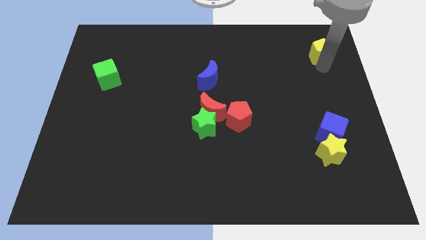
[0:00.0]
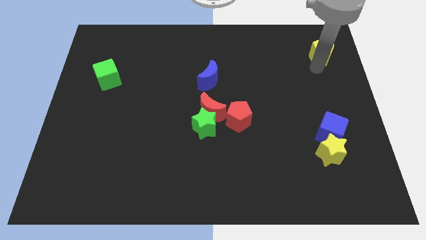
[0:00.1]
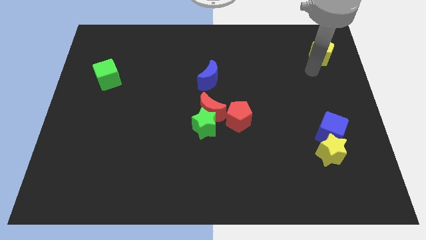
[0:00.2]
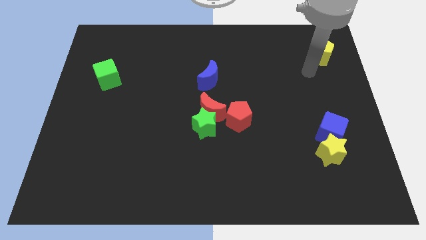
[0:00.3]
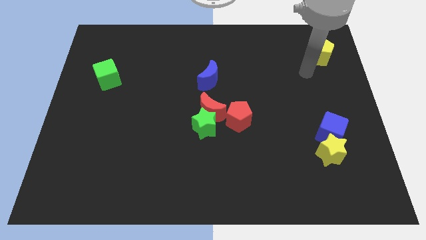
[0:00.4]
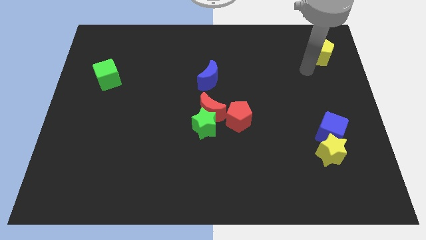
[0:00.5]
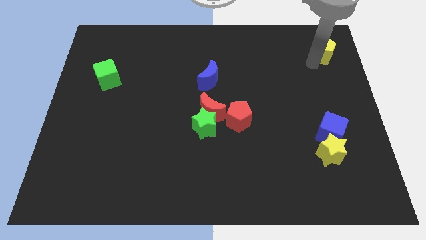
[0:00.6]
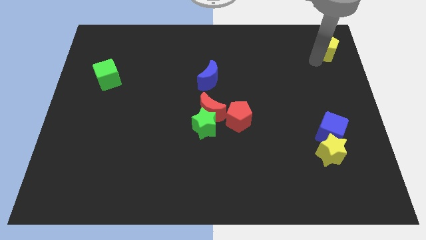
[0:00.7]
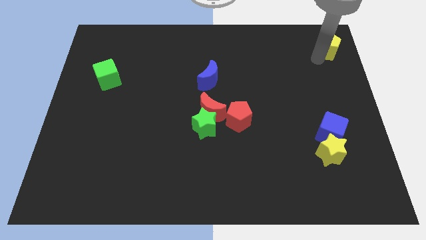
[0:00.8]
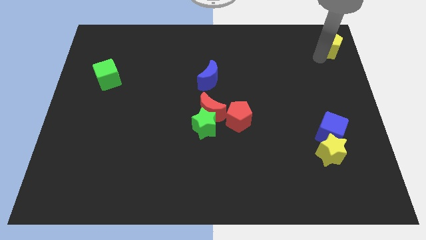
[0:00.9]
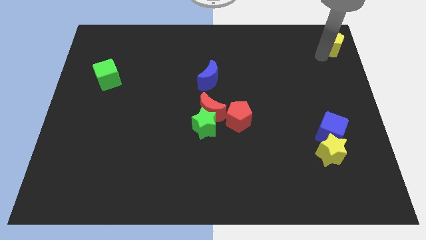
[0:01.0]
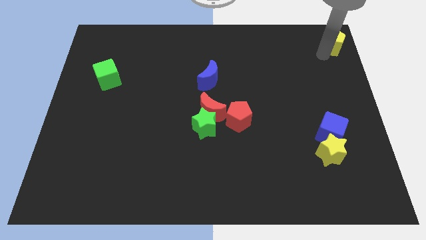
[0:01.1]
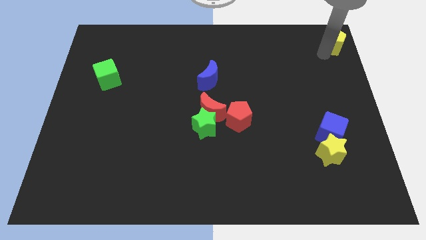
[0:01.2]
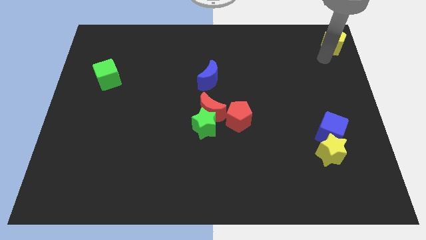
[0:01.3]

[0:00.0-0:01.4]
slide the yellow pentagon towards the top right of the board

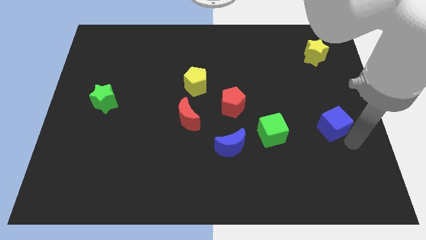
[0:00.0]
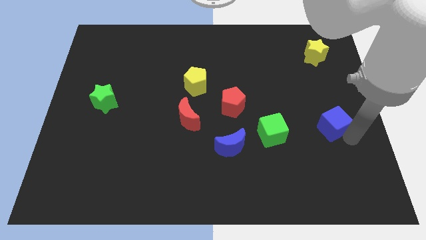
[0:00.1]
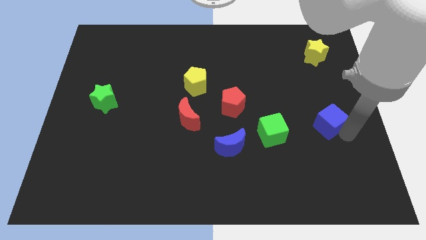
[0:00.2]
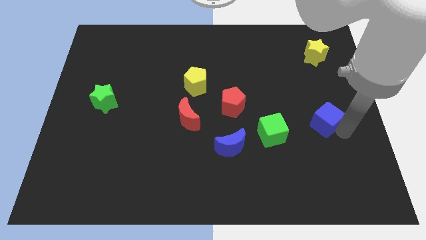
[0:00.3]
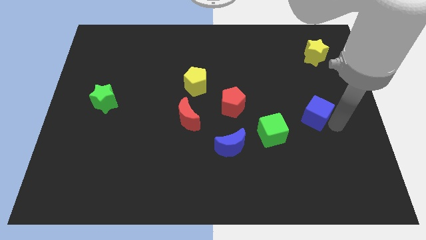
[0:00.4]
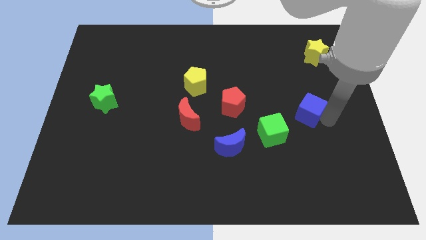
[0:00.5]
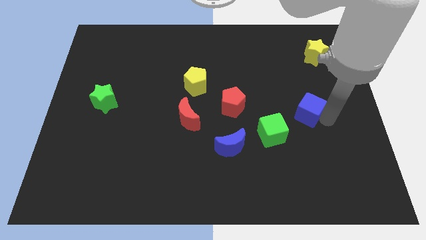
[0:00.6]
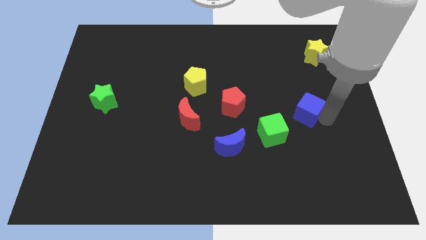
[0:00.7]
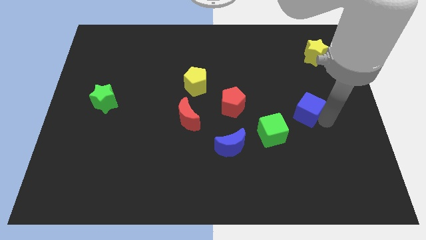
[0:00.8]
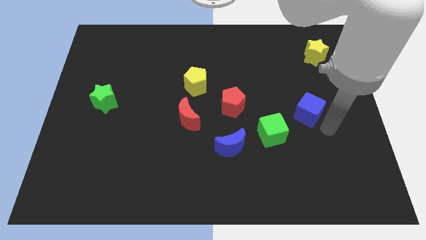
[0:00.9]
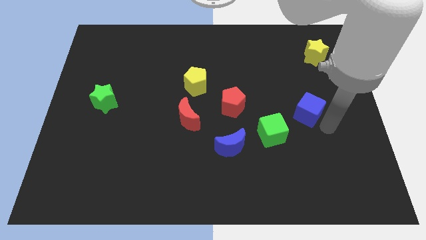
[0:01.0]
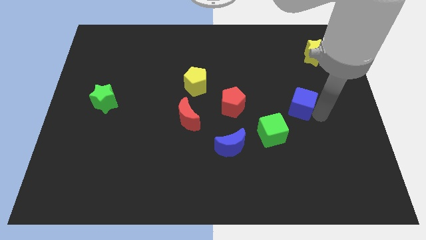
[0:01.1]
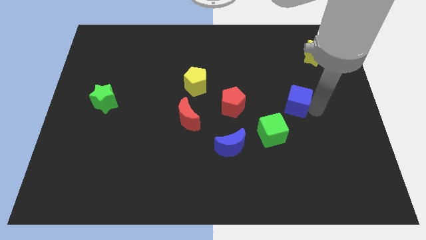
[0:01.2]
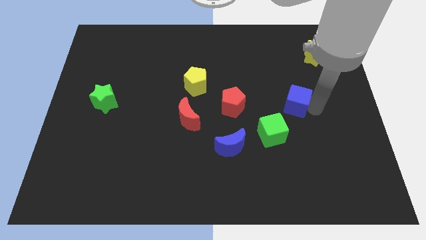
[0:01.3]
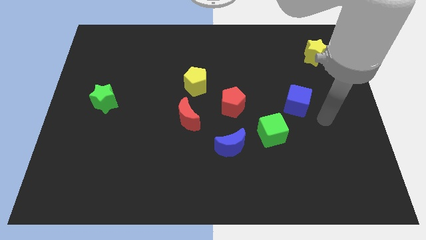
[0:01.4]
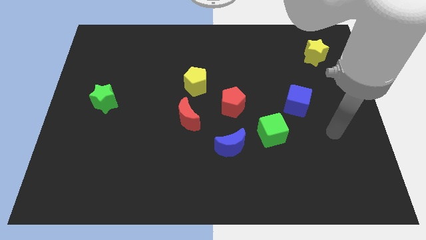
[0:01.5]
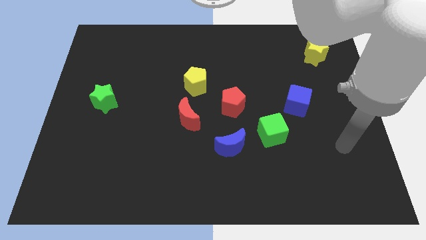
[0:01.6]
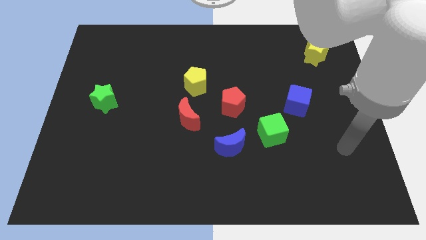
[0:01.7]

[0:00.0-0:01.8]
move your arm away from the blue cube

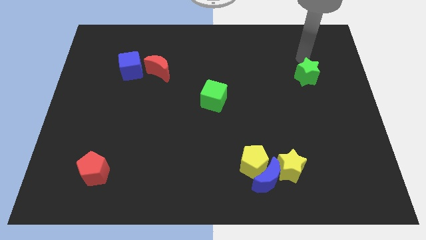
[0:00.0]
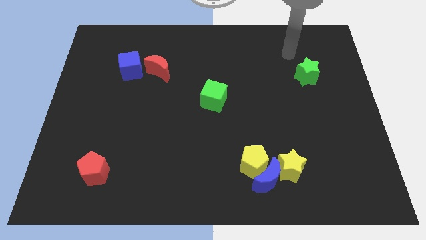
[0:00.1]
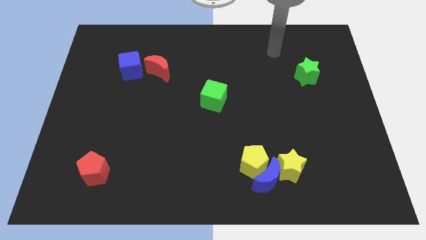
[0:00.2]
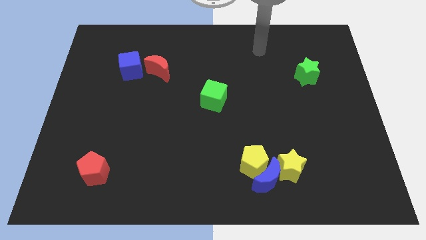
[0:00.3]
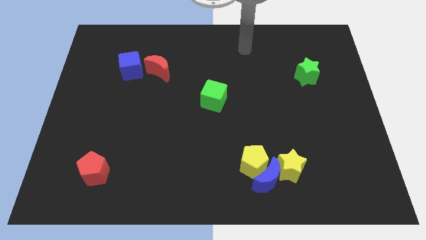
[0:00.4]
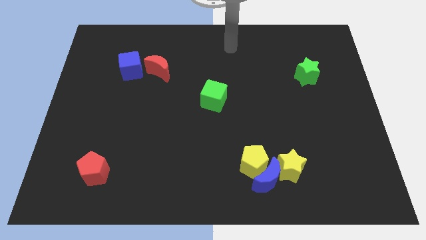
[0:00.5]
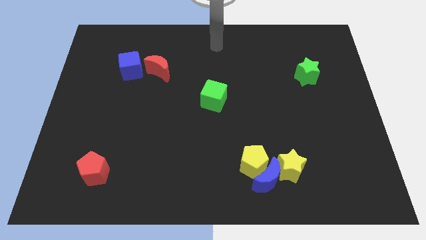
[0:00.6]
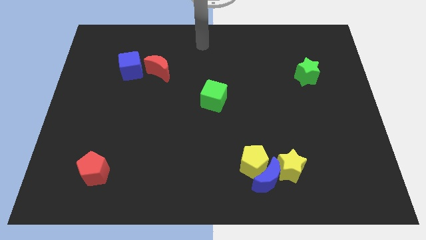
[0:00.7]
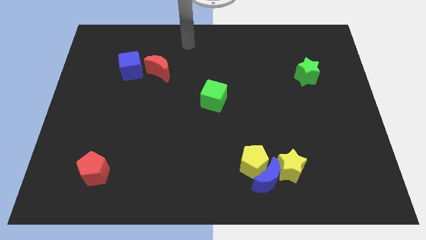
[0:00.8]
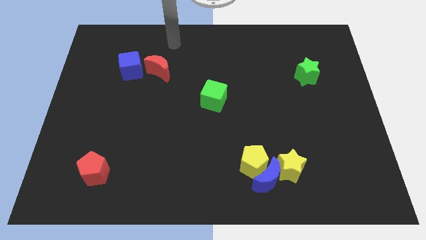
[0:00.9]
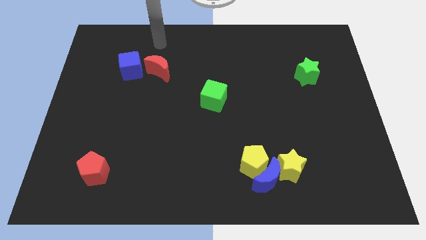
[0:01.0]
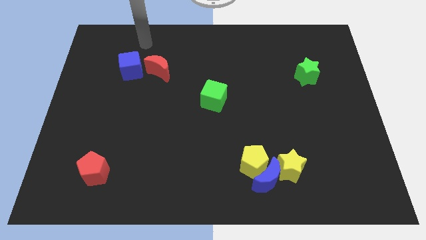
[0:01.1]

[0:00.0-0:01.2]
move the arm away from the green star

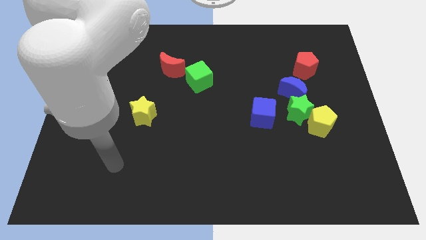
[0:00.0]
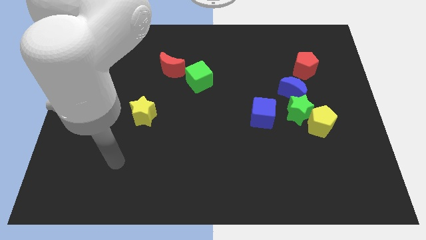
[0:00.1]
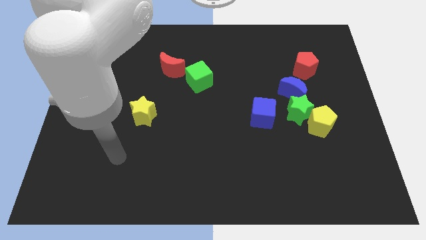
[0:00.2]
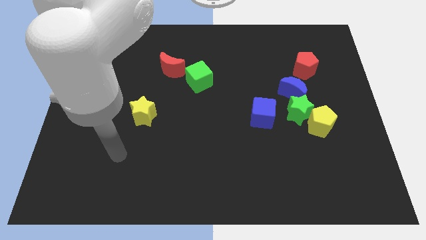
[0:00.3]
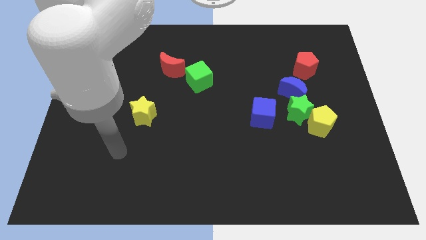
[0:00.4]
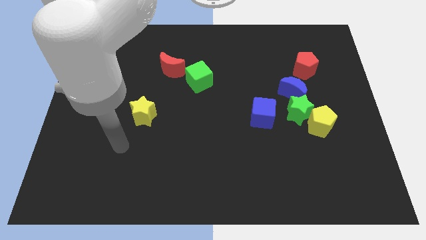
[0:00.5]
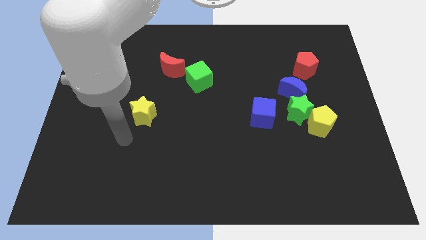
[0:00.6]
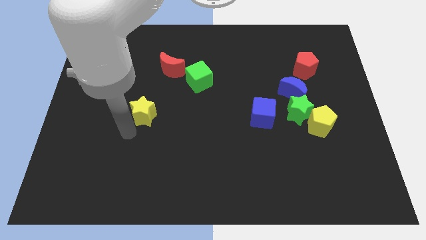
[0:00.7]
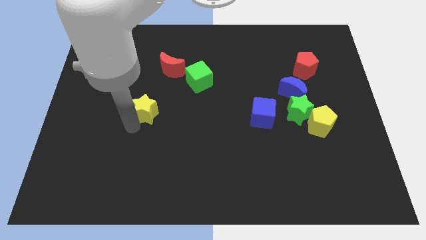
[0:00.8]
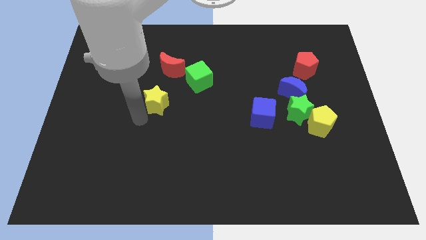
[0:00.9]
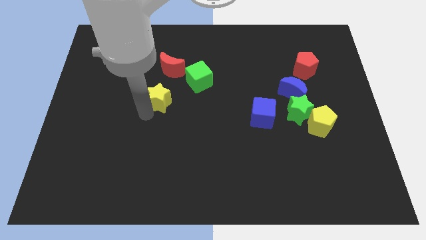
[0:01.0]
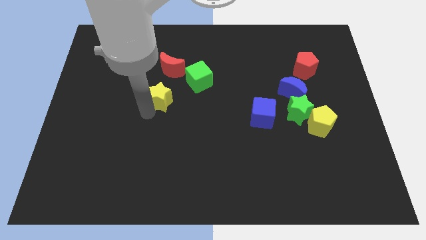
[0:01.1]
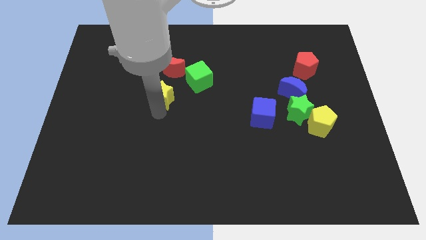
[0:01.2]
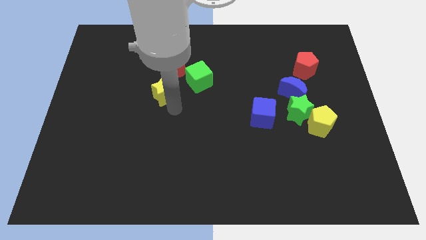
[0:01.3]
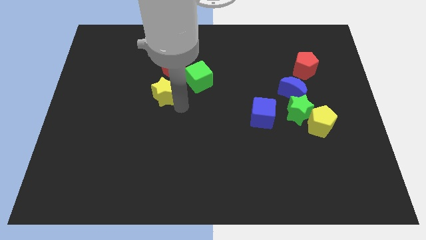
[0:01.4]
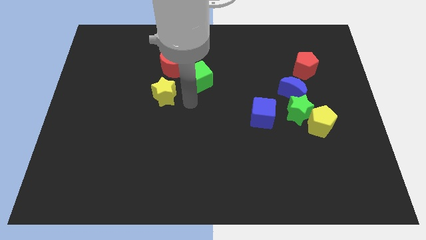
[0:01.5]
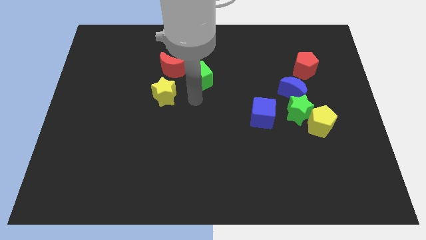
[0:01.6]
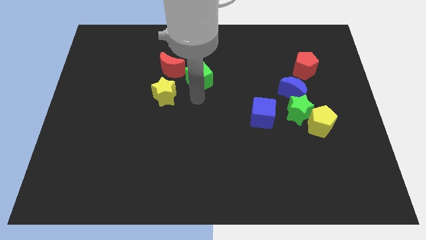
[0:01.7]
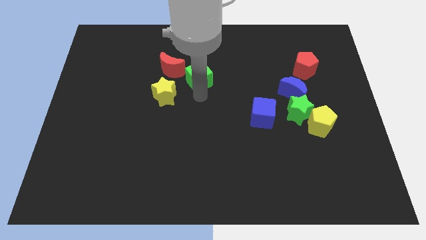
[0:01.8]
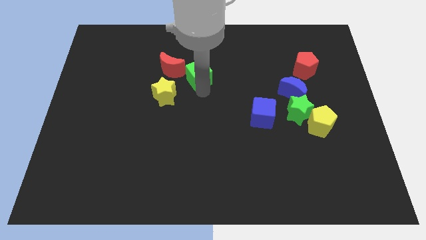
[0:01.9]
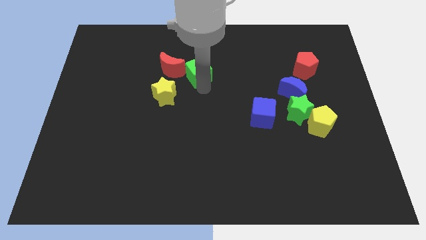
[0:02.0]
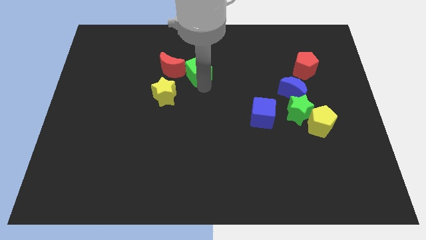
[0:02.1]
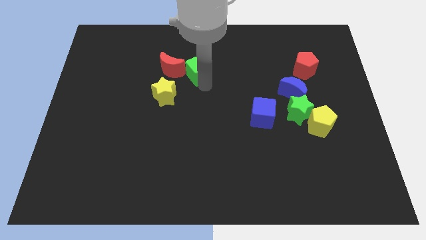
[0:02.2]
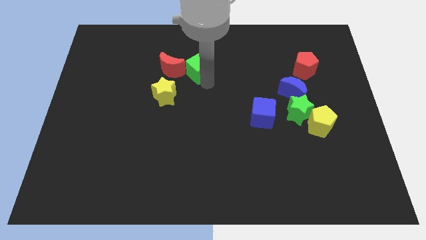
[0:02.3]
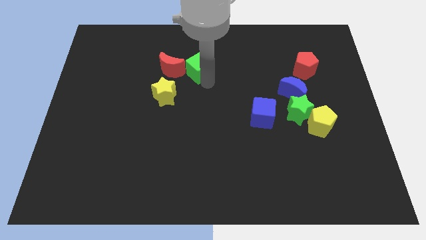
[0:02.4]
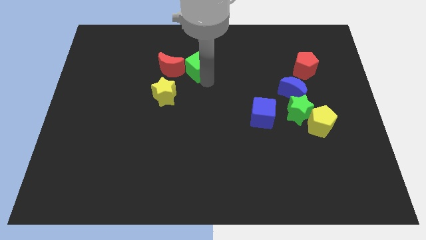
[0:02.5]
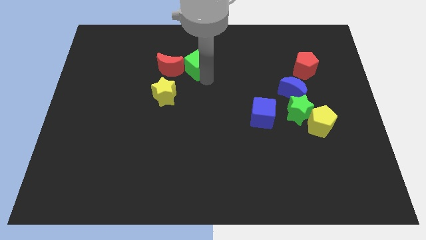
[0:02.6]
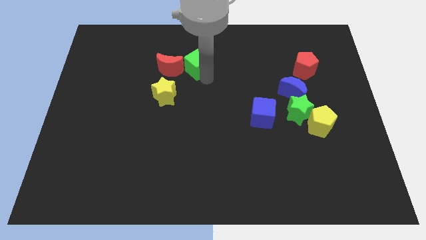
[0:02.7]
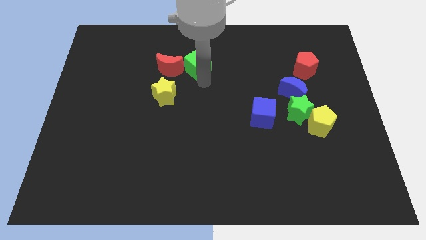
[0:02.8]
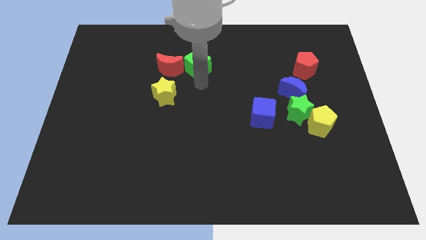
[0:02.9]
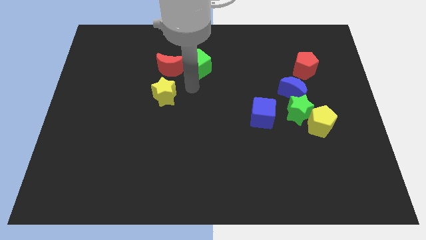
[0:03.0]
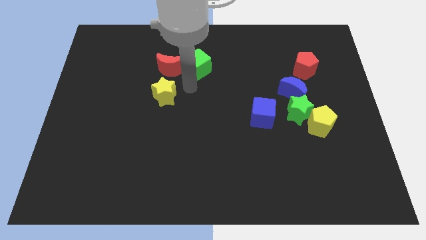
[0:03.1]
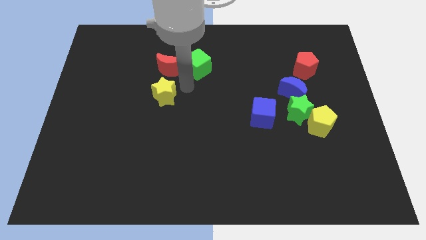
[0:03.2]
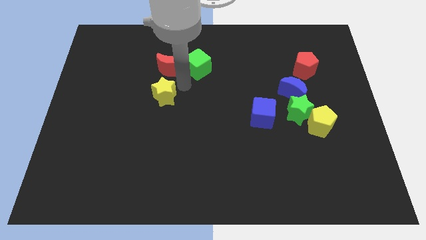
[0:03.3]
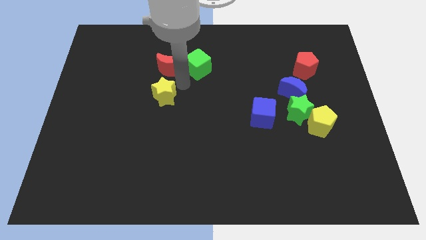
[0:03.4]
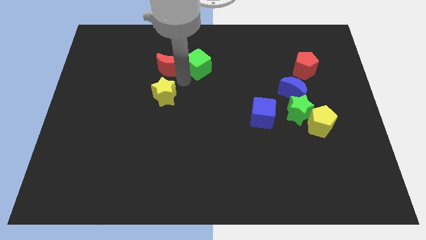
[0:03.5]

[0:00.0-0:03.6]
move the green cube and yellow star diagonal to each other

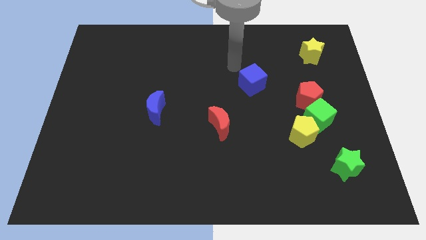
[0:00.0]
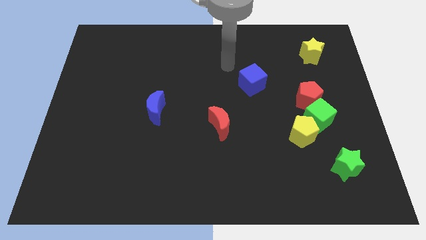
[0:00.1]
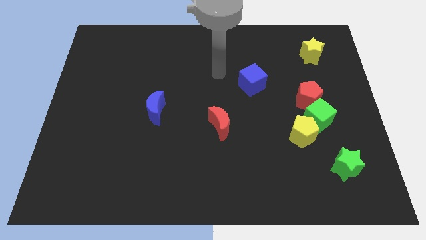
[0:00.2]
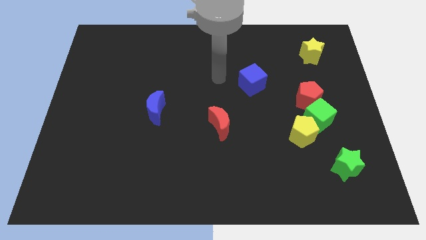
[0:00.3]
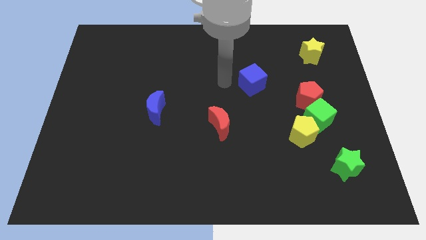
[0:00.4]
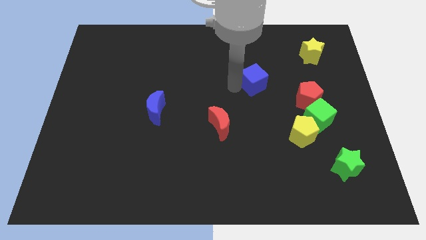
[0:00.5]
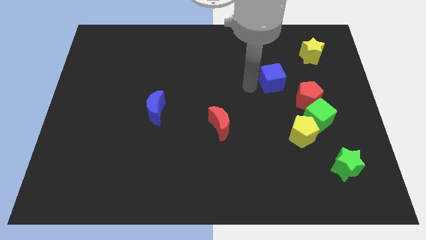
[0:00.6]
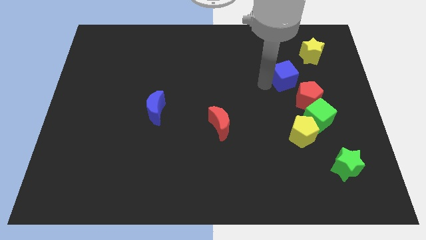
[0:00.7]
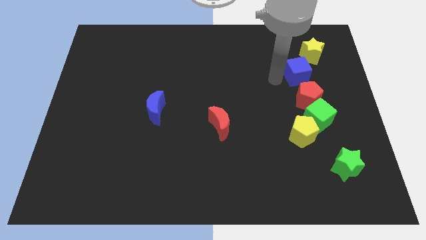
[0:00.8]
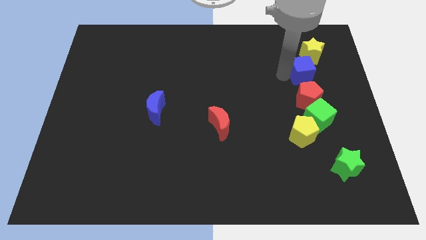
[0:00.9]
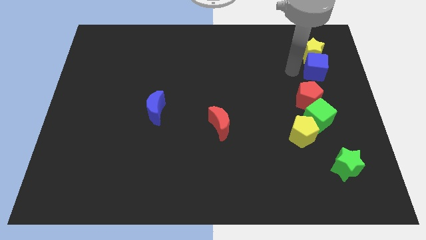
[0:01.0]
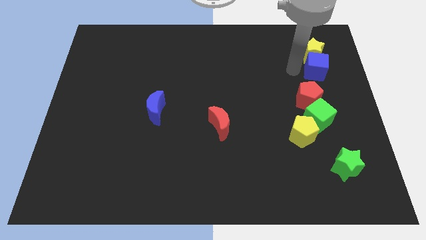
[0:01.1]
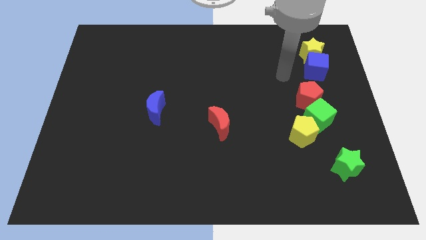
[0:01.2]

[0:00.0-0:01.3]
place the blue cube down to the yellow star
